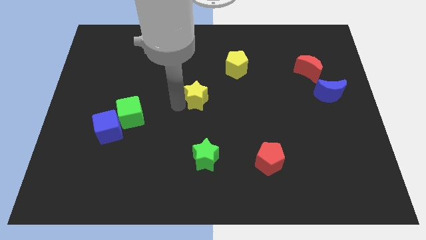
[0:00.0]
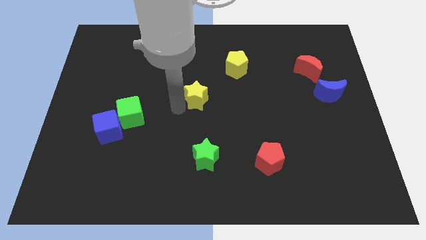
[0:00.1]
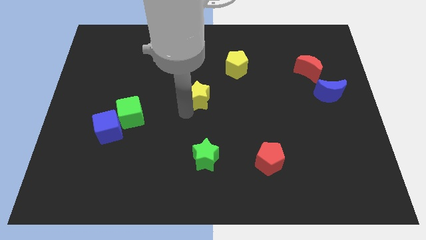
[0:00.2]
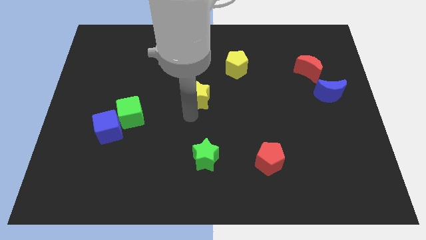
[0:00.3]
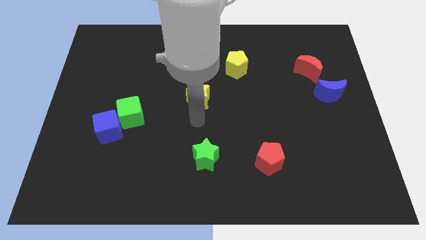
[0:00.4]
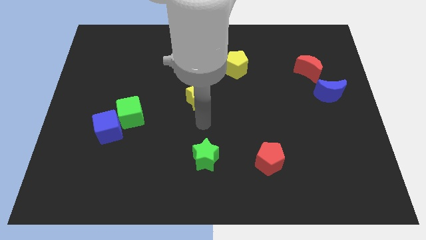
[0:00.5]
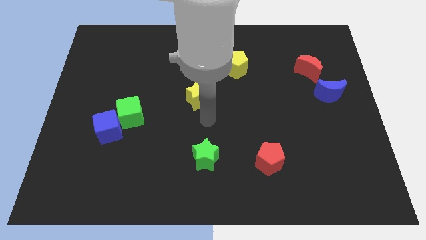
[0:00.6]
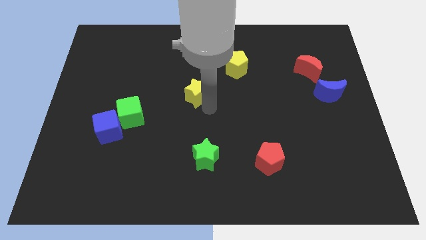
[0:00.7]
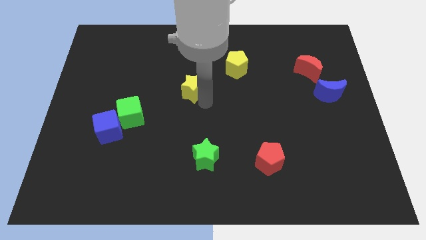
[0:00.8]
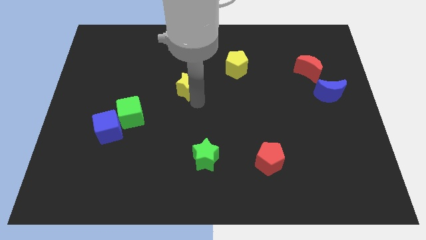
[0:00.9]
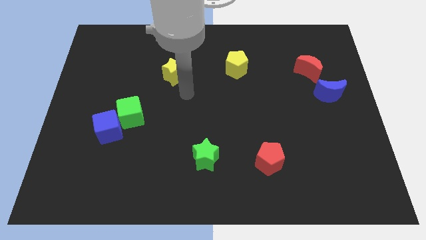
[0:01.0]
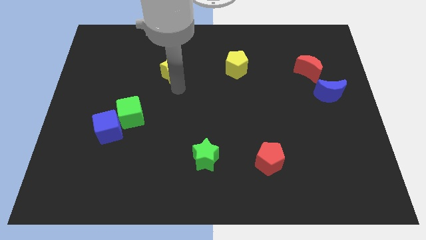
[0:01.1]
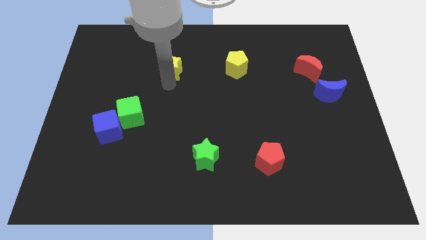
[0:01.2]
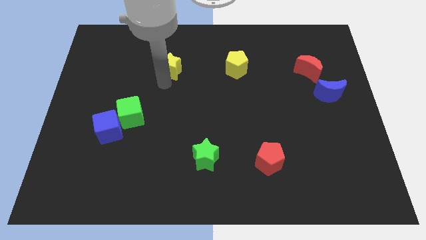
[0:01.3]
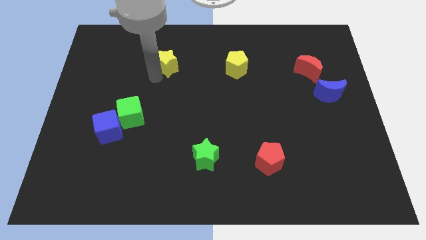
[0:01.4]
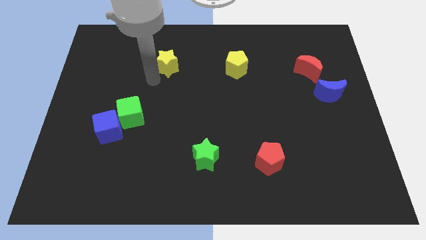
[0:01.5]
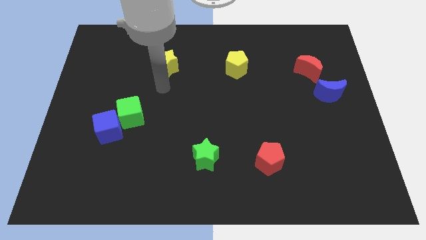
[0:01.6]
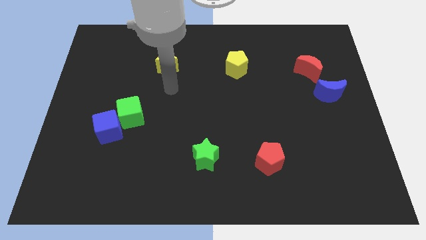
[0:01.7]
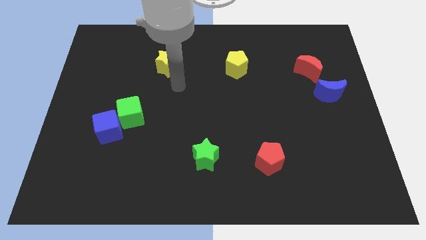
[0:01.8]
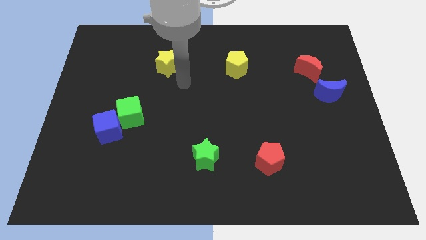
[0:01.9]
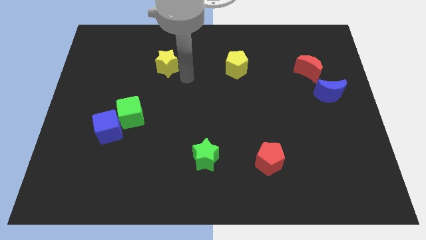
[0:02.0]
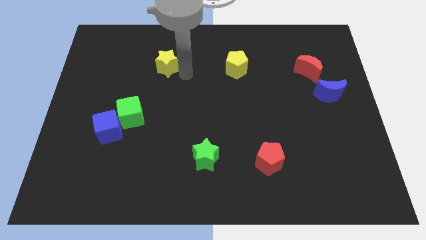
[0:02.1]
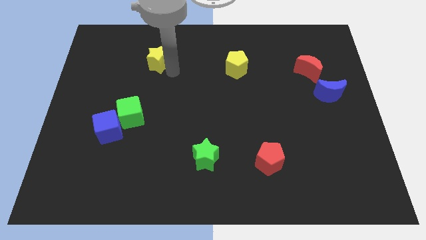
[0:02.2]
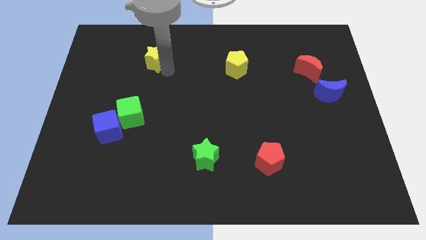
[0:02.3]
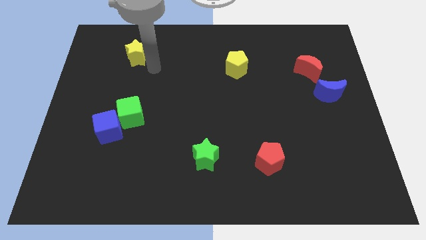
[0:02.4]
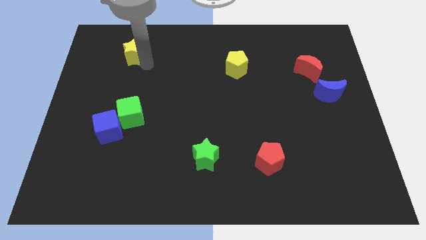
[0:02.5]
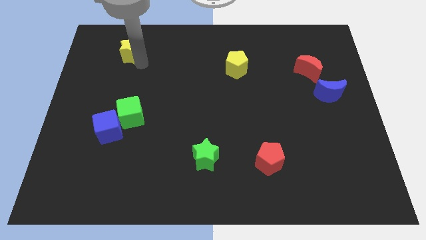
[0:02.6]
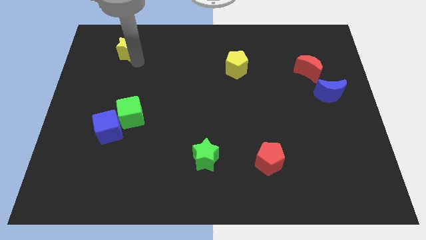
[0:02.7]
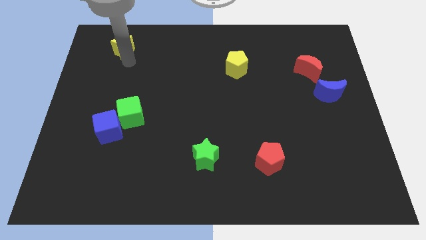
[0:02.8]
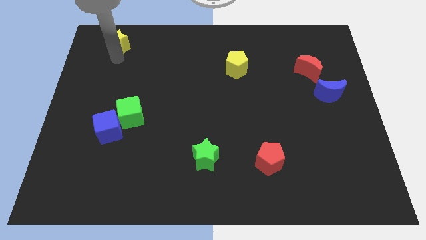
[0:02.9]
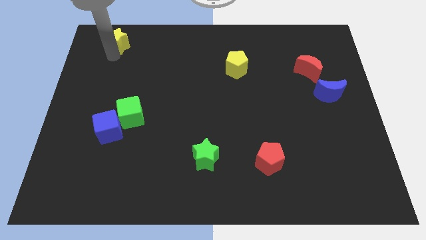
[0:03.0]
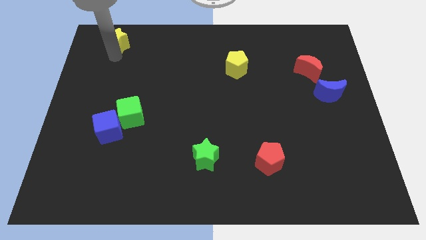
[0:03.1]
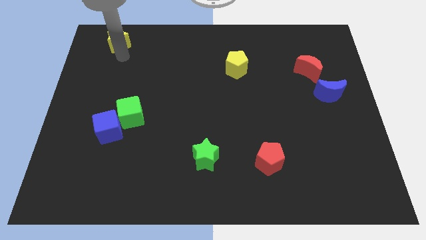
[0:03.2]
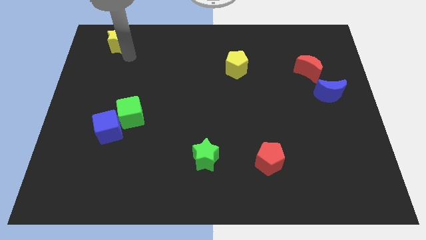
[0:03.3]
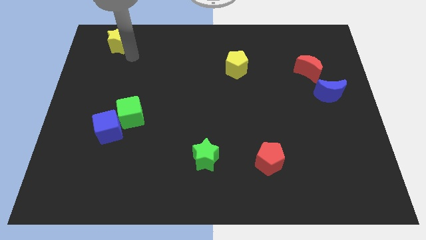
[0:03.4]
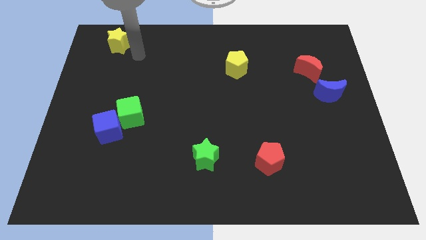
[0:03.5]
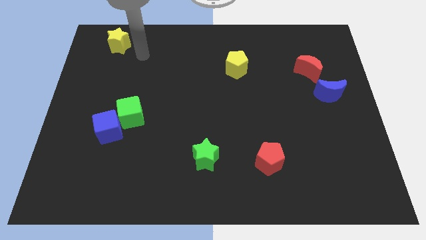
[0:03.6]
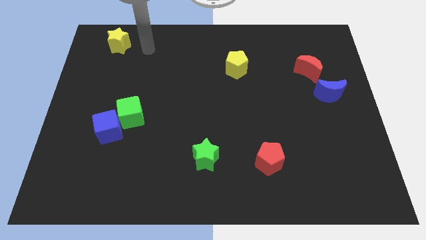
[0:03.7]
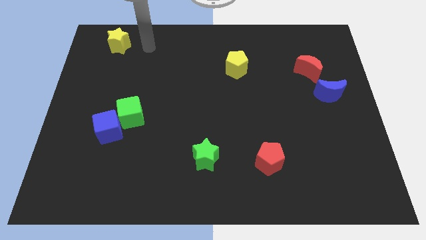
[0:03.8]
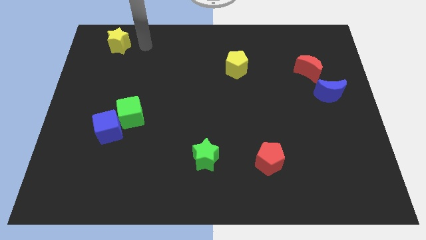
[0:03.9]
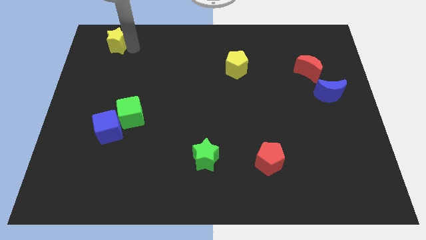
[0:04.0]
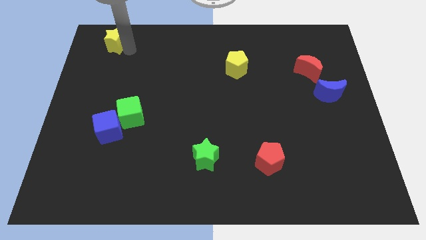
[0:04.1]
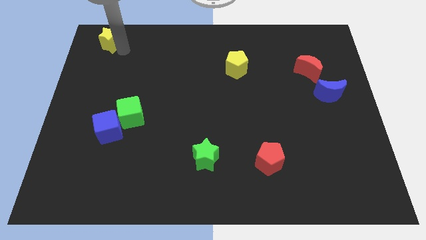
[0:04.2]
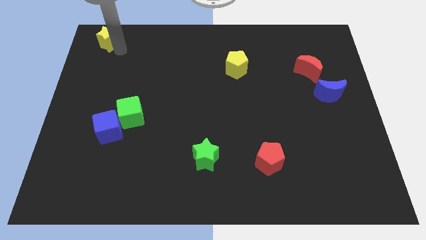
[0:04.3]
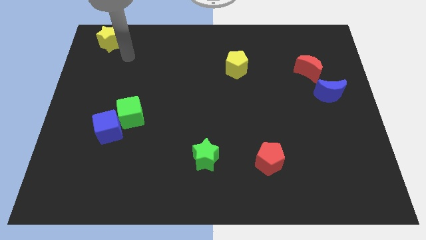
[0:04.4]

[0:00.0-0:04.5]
place the yellow star towards the top left corner of the board

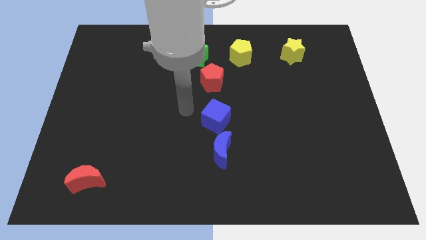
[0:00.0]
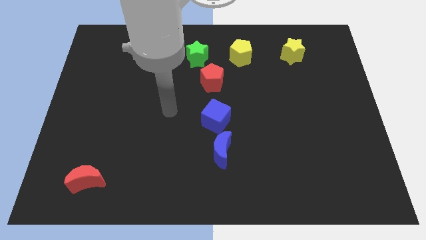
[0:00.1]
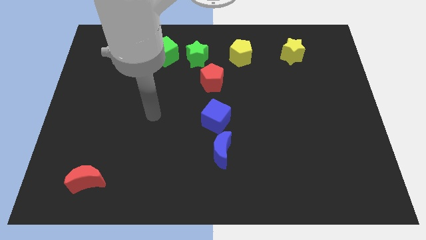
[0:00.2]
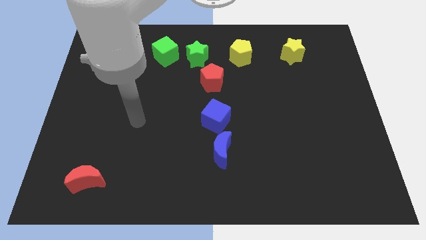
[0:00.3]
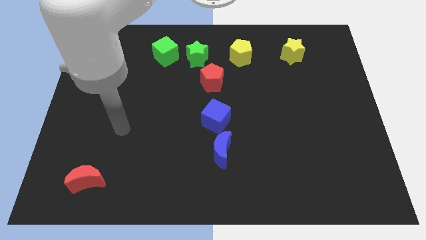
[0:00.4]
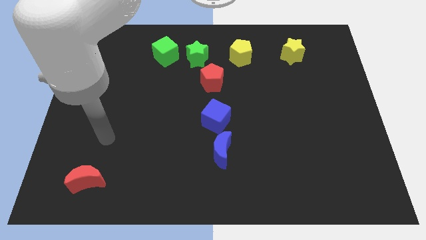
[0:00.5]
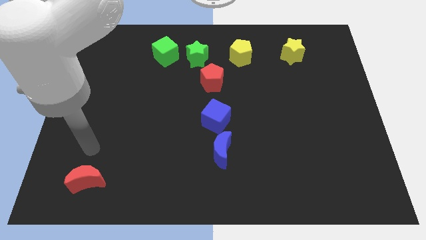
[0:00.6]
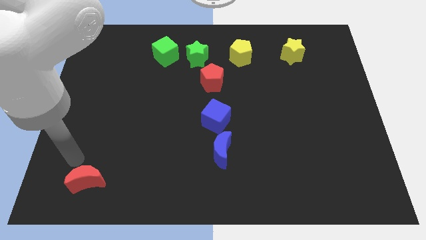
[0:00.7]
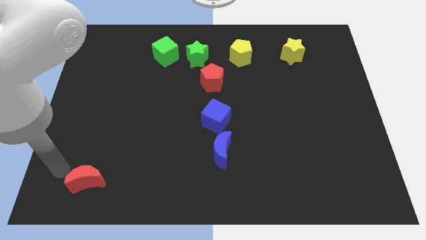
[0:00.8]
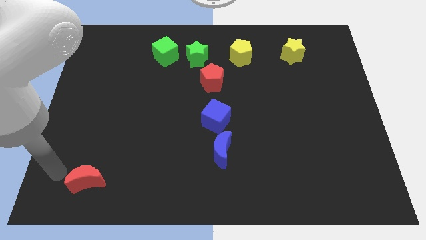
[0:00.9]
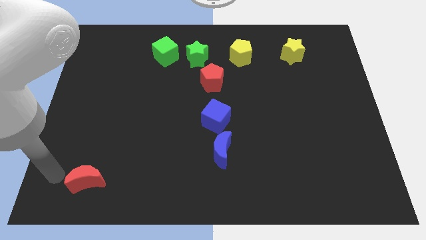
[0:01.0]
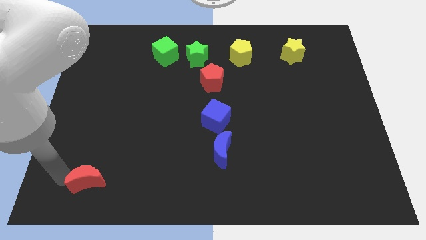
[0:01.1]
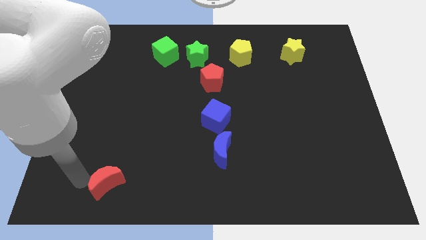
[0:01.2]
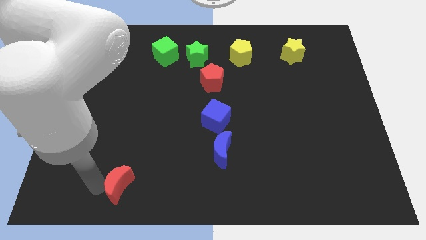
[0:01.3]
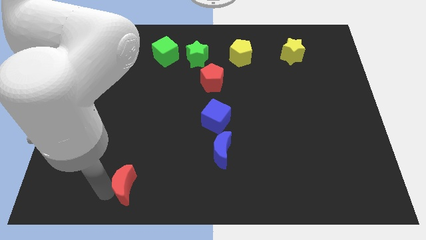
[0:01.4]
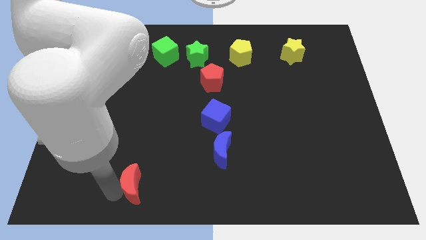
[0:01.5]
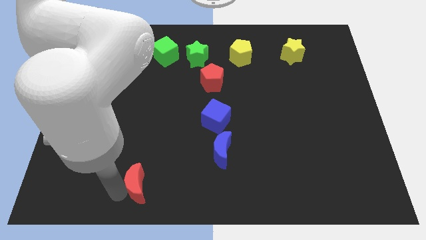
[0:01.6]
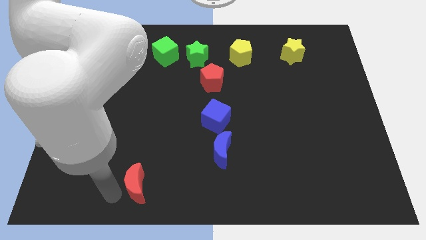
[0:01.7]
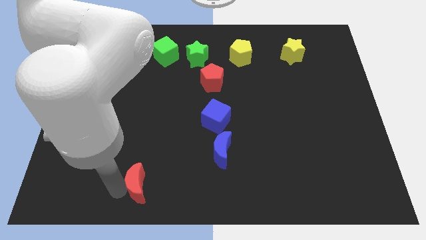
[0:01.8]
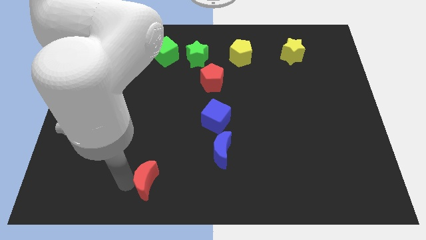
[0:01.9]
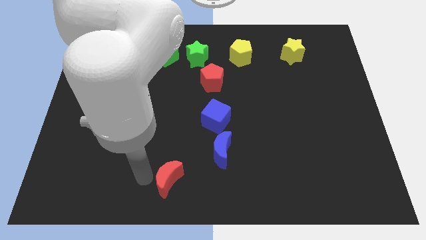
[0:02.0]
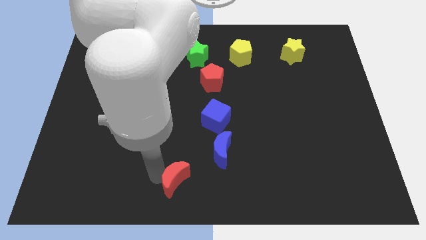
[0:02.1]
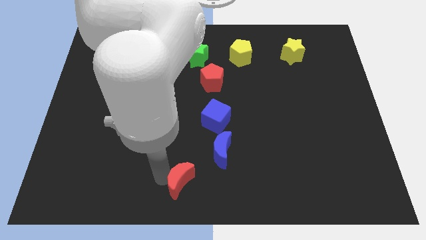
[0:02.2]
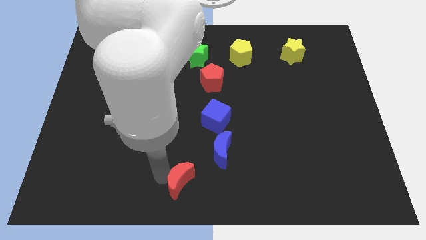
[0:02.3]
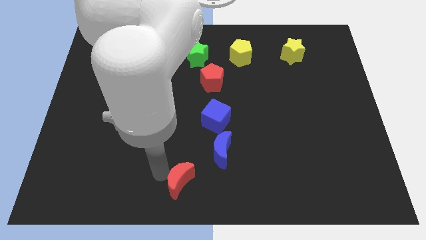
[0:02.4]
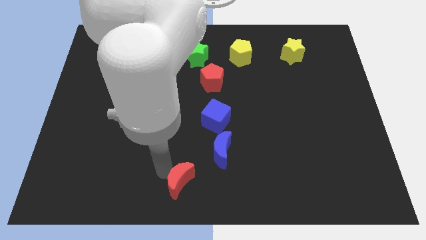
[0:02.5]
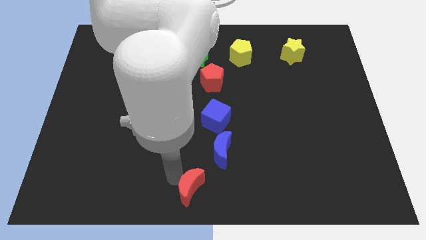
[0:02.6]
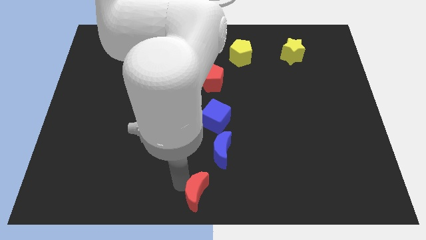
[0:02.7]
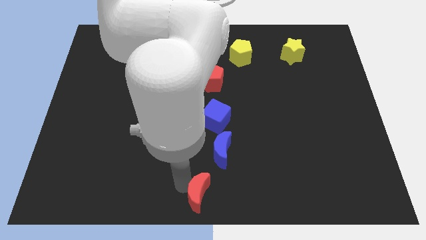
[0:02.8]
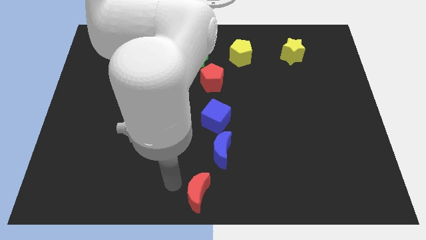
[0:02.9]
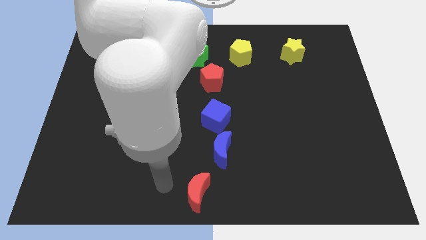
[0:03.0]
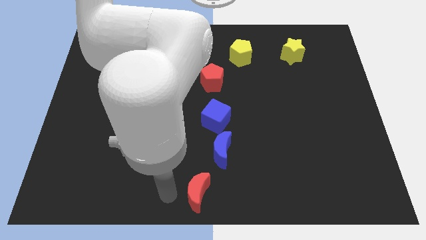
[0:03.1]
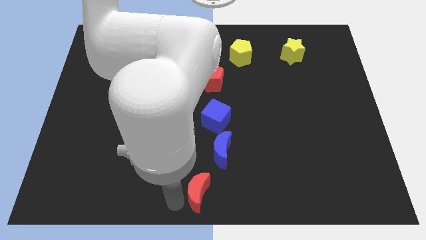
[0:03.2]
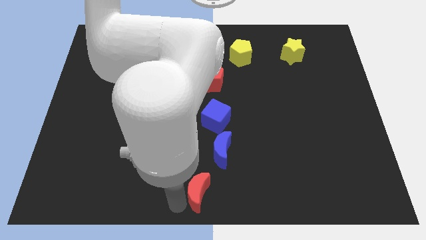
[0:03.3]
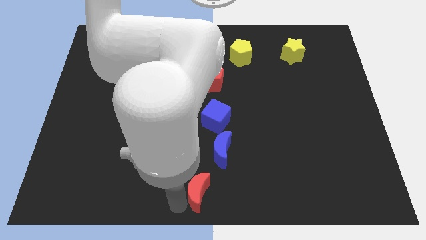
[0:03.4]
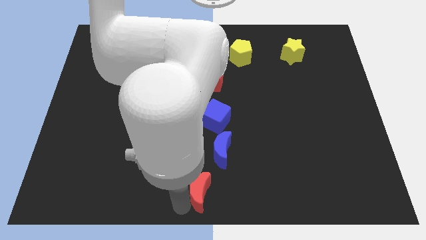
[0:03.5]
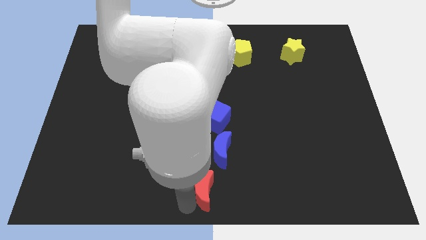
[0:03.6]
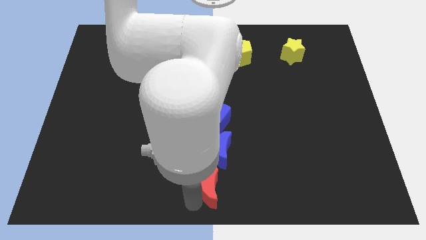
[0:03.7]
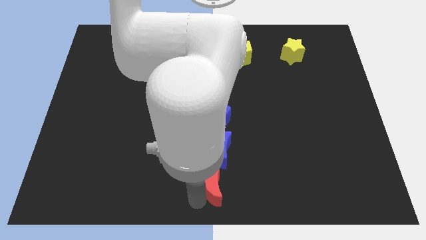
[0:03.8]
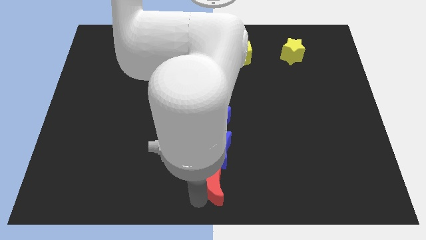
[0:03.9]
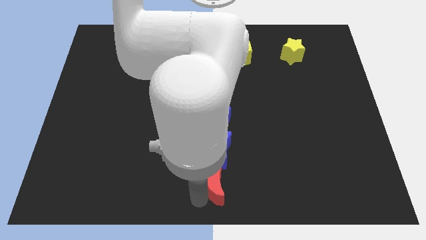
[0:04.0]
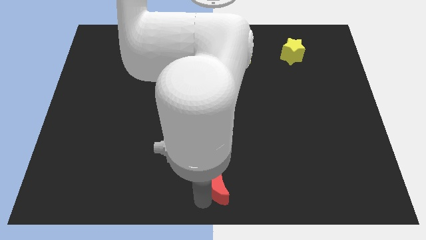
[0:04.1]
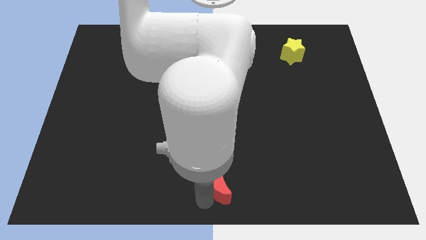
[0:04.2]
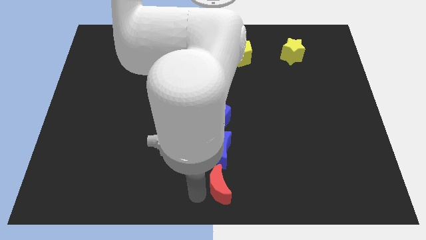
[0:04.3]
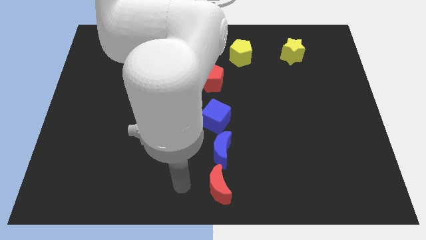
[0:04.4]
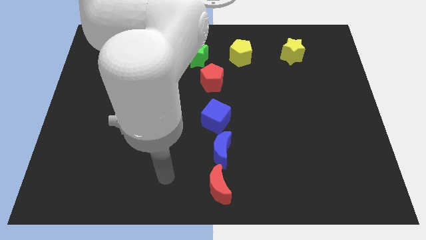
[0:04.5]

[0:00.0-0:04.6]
place the red crescent to the bottom center of the board
